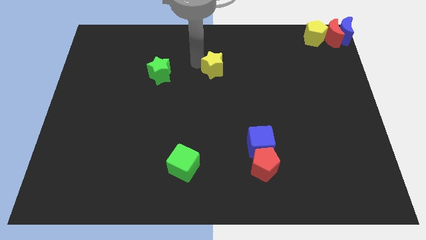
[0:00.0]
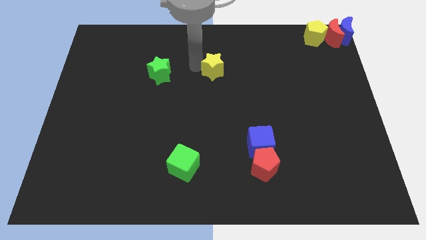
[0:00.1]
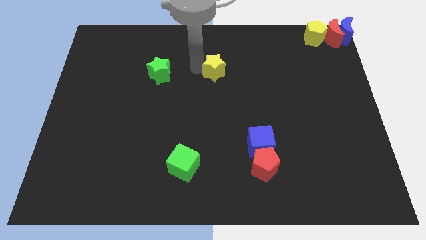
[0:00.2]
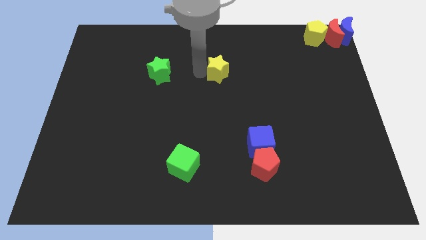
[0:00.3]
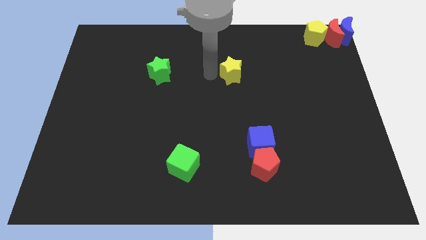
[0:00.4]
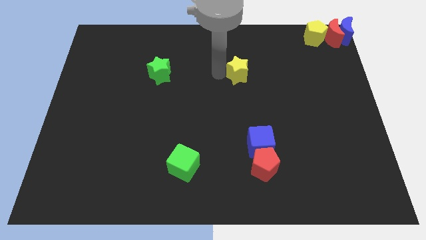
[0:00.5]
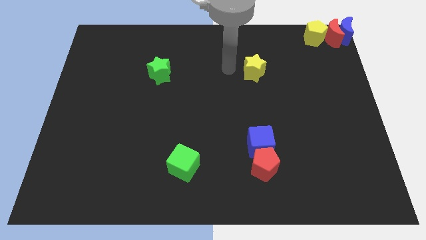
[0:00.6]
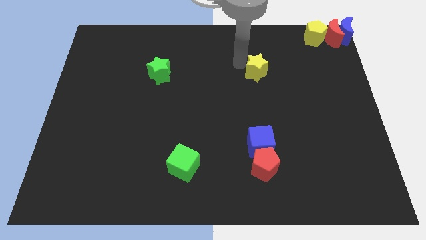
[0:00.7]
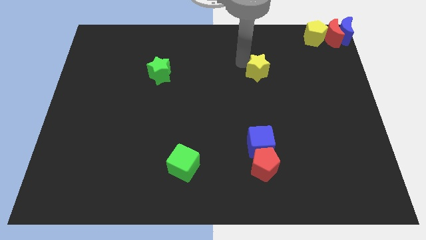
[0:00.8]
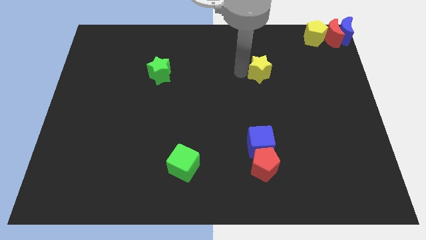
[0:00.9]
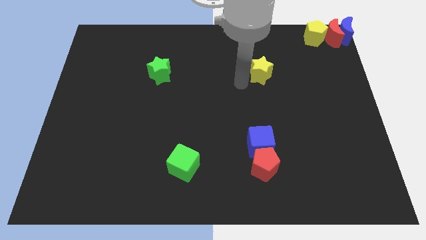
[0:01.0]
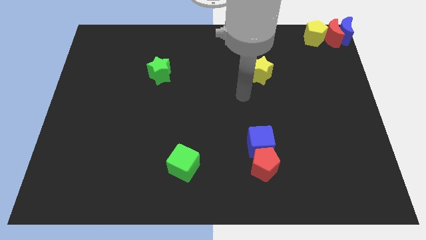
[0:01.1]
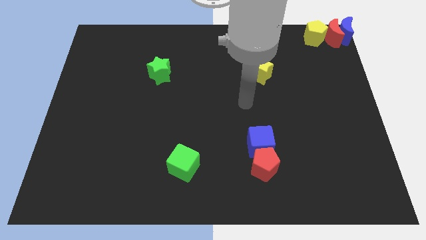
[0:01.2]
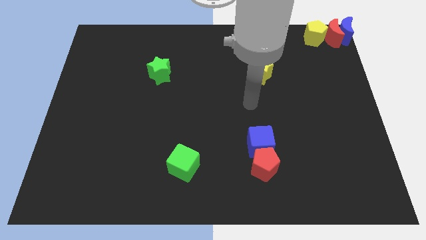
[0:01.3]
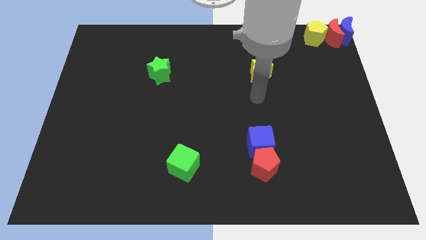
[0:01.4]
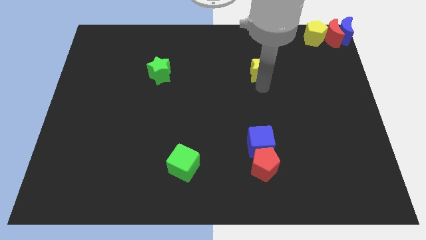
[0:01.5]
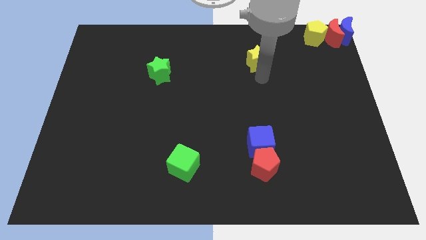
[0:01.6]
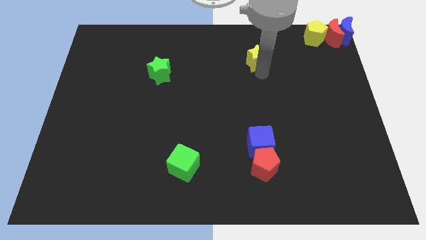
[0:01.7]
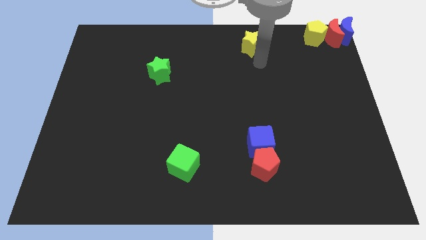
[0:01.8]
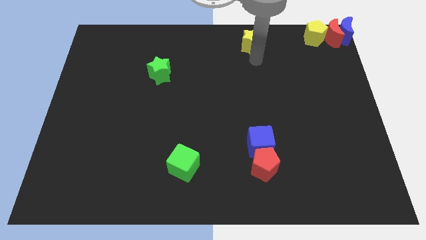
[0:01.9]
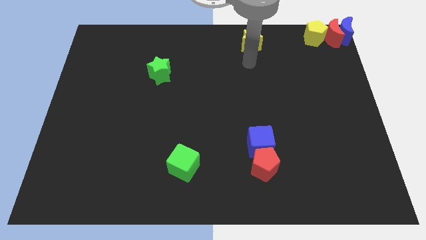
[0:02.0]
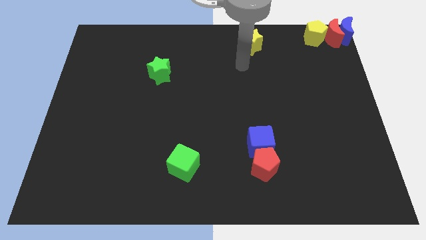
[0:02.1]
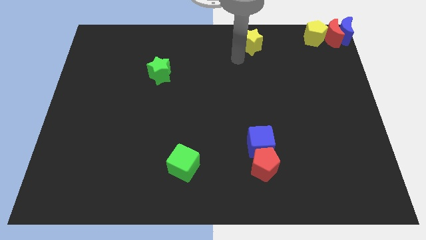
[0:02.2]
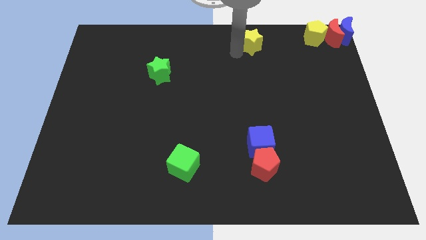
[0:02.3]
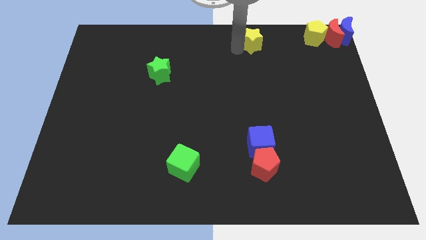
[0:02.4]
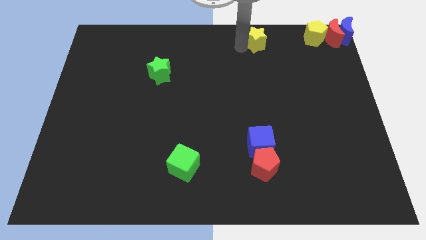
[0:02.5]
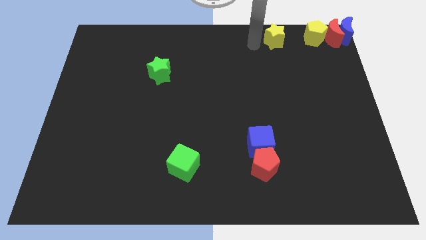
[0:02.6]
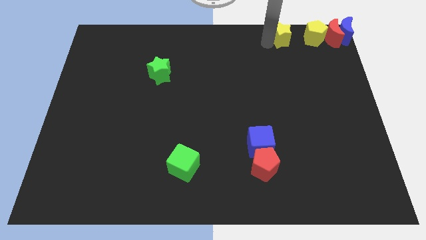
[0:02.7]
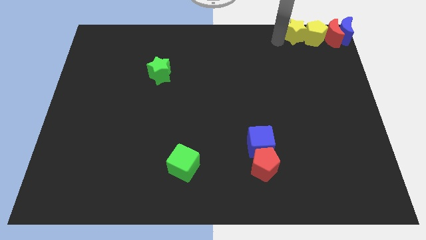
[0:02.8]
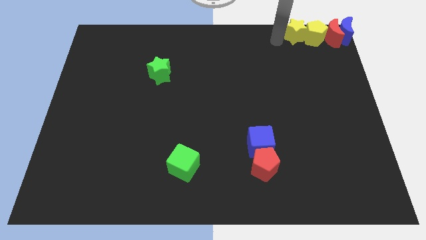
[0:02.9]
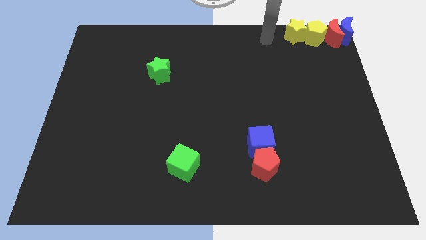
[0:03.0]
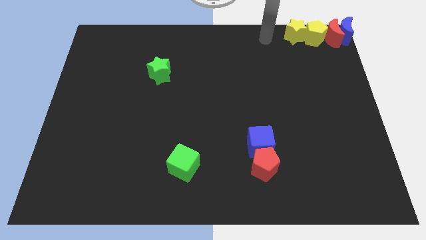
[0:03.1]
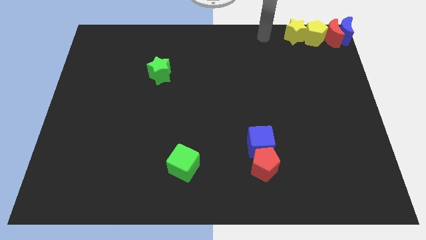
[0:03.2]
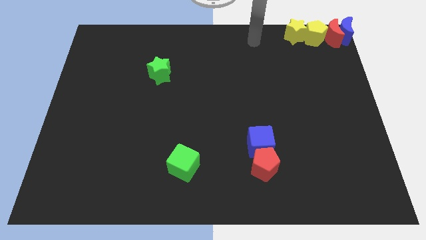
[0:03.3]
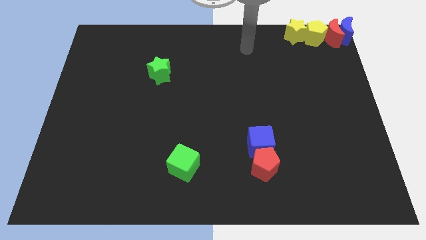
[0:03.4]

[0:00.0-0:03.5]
push the yellow star into the left side of the yellow pentagon

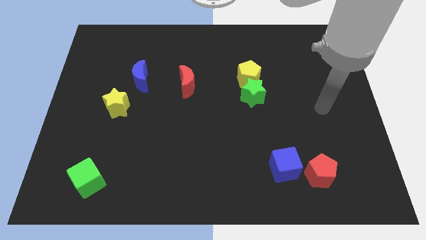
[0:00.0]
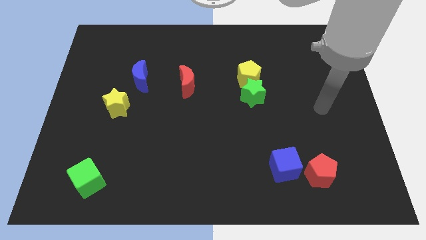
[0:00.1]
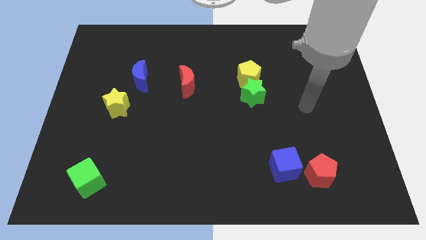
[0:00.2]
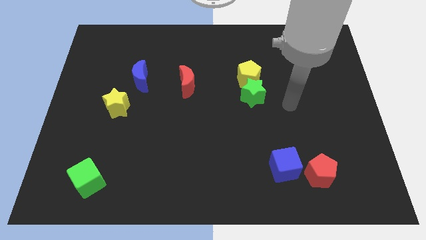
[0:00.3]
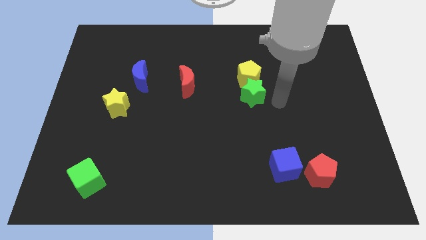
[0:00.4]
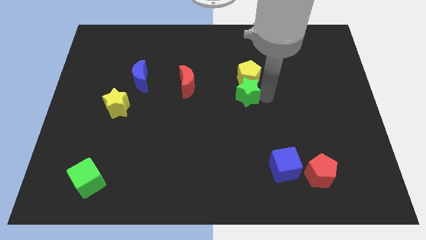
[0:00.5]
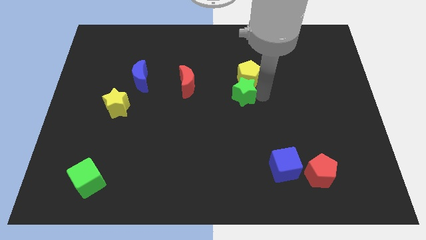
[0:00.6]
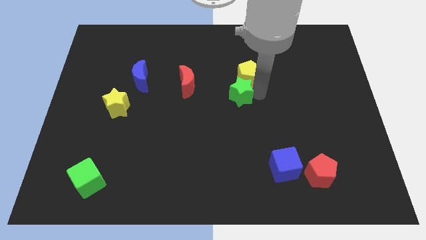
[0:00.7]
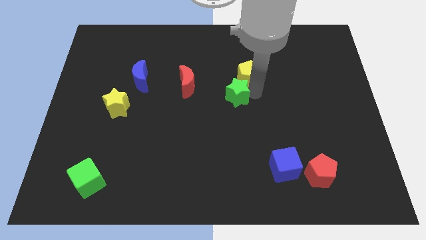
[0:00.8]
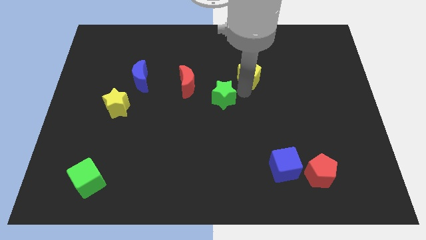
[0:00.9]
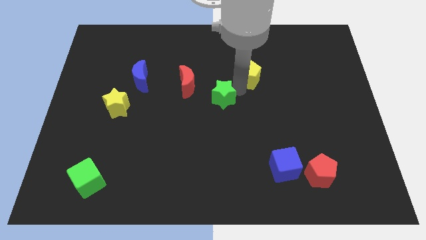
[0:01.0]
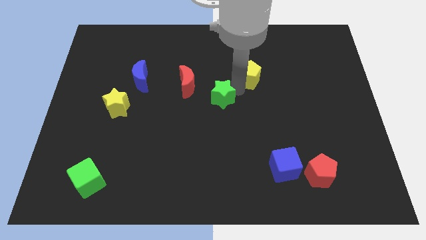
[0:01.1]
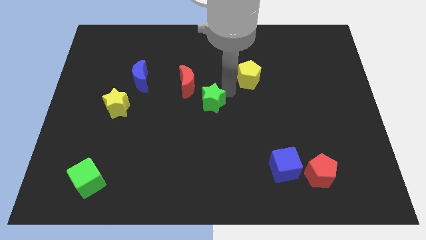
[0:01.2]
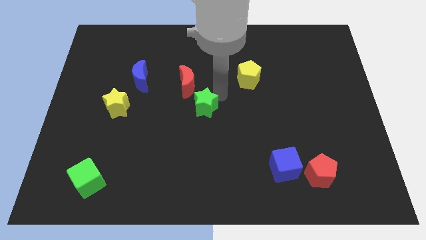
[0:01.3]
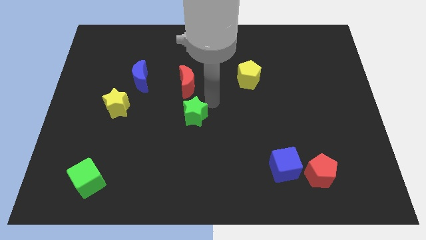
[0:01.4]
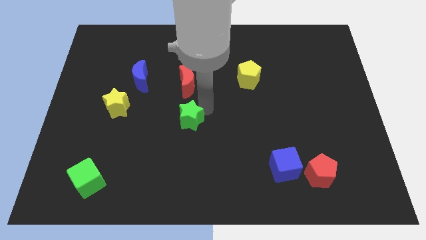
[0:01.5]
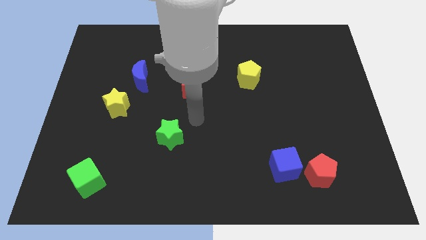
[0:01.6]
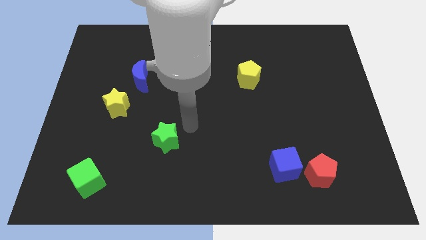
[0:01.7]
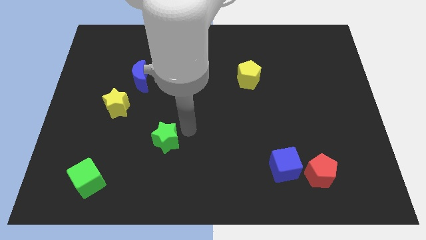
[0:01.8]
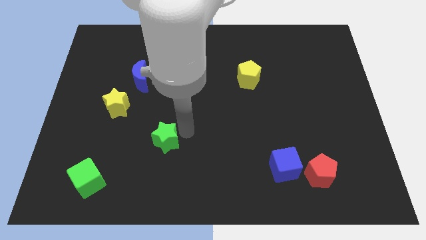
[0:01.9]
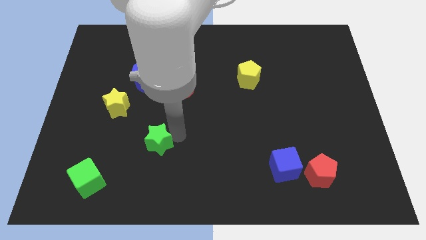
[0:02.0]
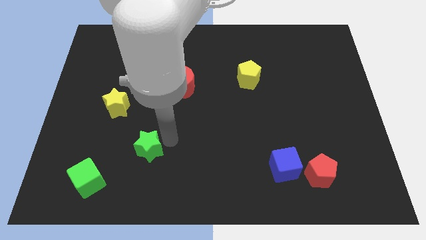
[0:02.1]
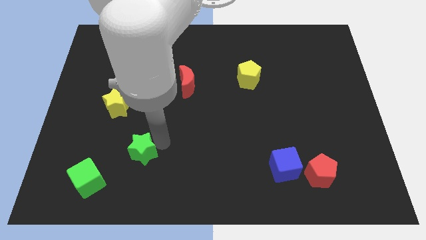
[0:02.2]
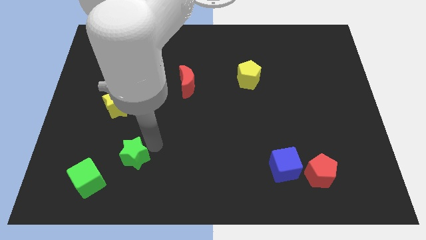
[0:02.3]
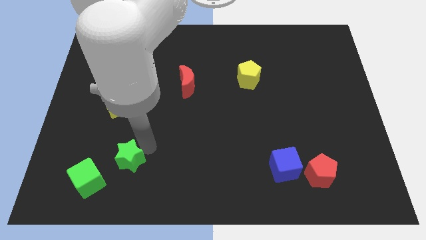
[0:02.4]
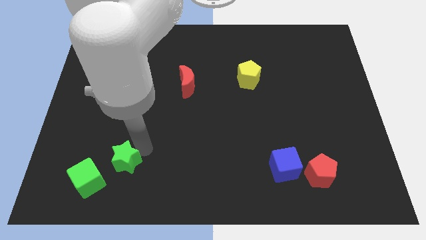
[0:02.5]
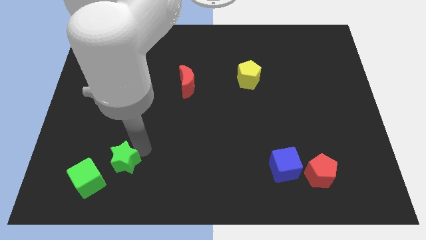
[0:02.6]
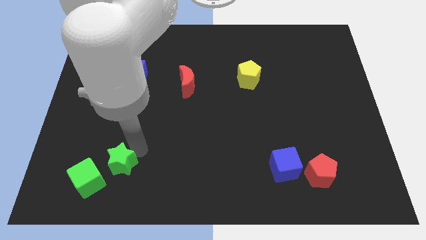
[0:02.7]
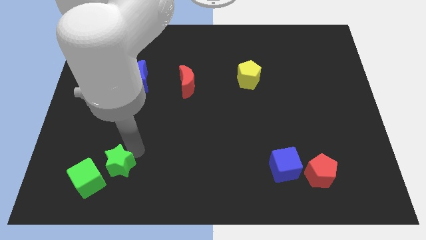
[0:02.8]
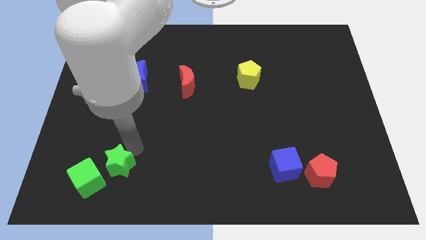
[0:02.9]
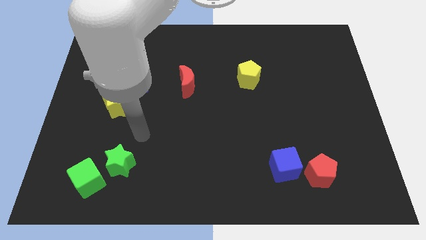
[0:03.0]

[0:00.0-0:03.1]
slide green star towards green cube

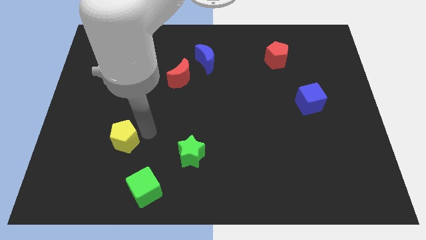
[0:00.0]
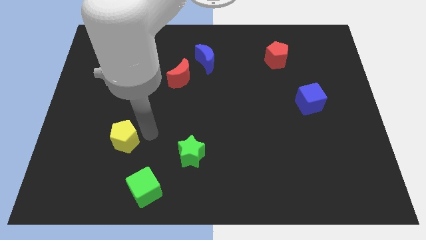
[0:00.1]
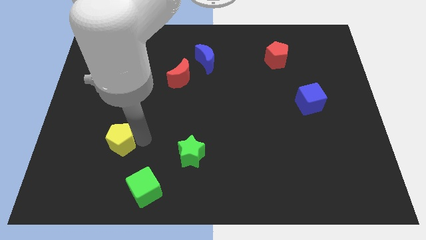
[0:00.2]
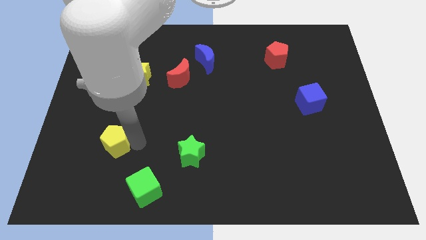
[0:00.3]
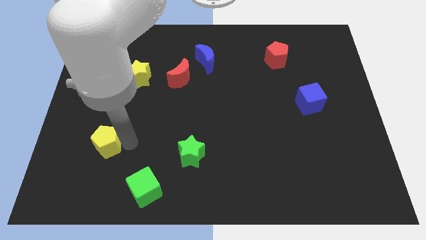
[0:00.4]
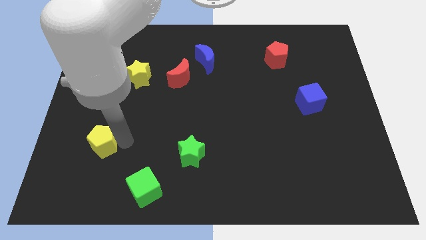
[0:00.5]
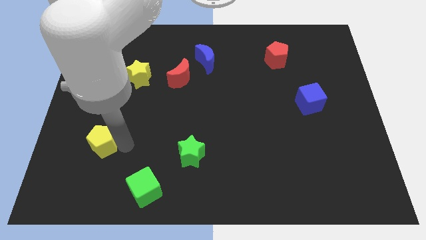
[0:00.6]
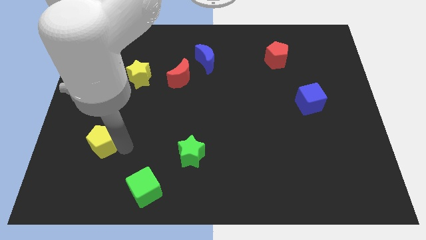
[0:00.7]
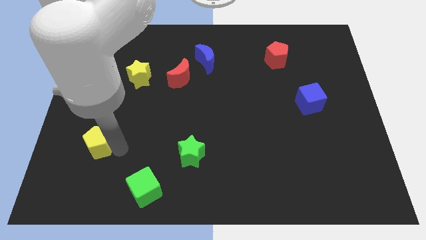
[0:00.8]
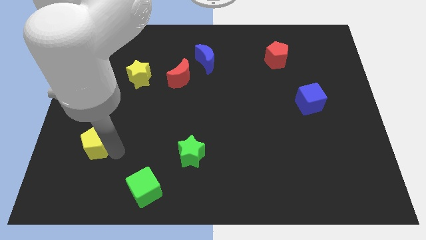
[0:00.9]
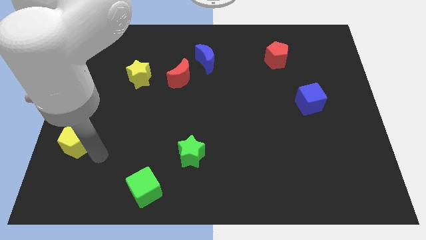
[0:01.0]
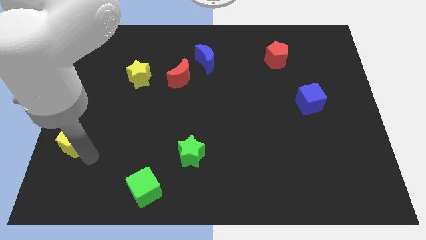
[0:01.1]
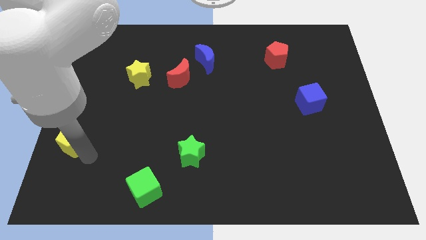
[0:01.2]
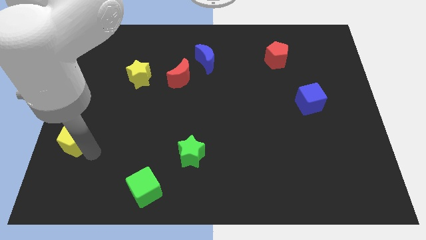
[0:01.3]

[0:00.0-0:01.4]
move the yellow pentagon slightly to the left

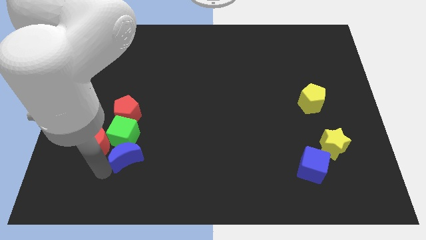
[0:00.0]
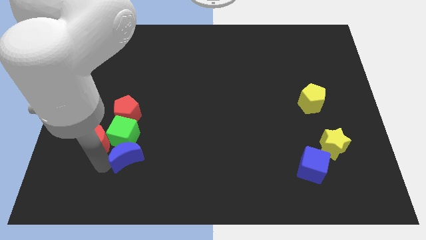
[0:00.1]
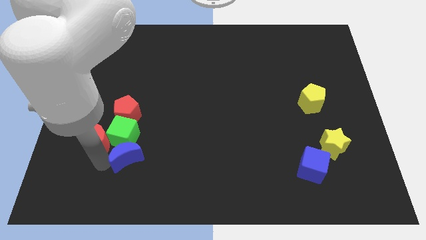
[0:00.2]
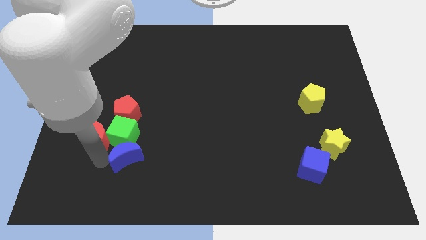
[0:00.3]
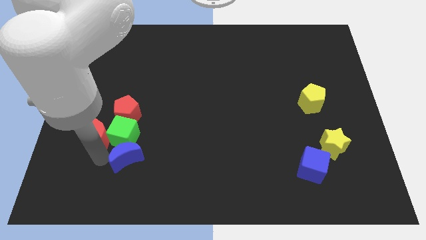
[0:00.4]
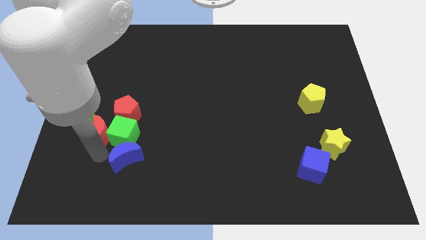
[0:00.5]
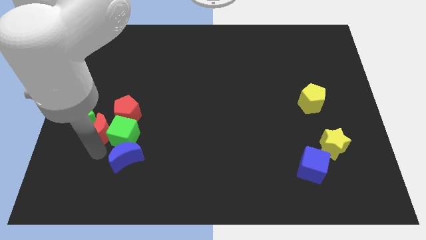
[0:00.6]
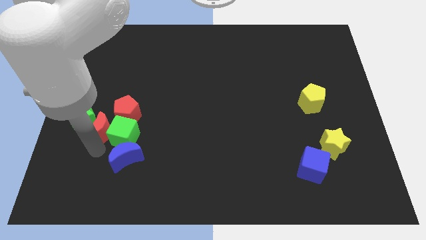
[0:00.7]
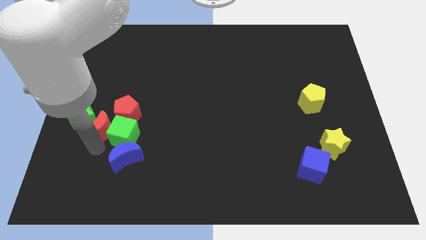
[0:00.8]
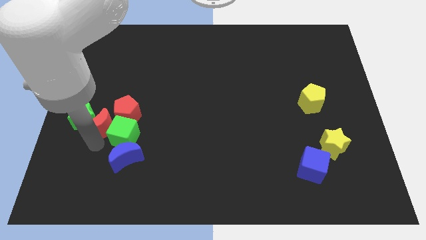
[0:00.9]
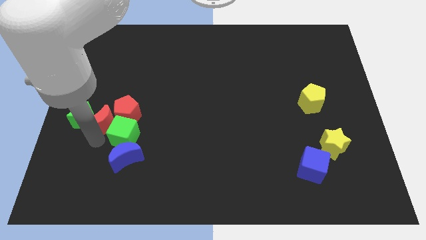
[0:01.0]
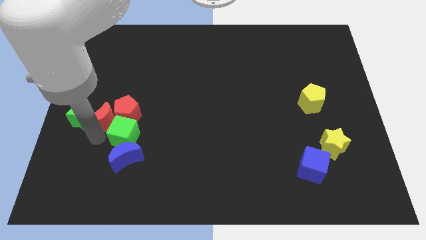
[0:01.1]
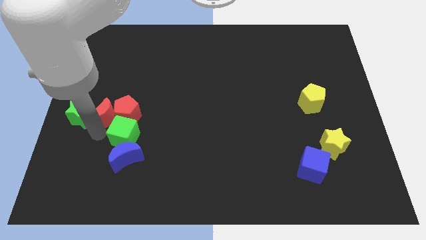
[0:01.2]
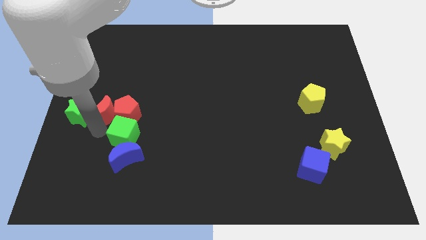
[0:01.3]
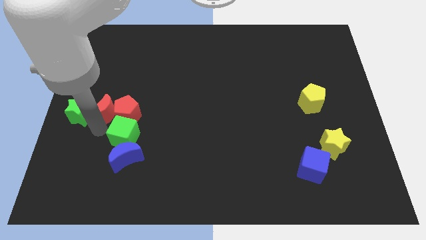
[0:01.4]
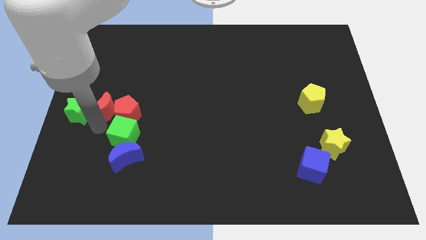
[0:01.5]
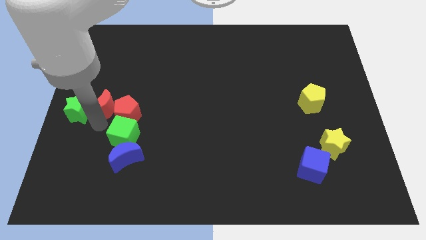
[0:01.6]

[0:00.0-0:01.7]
push the red crescent to the top
